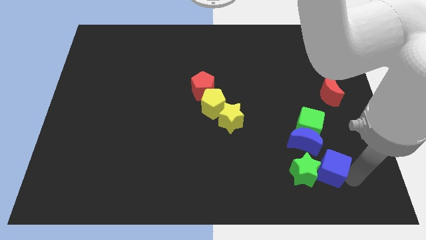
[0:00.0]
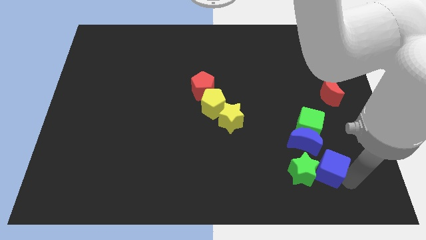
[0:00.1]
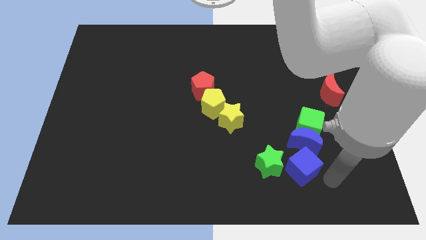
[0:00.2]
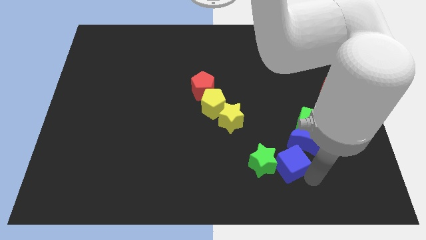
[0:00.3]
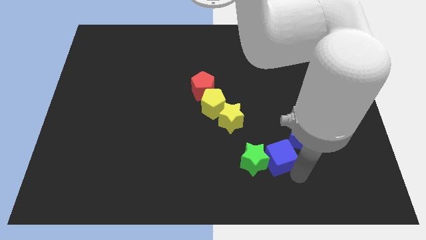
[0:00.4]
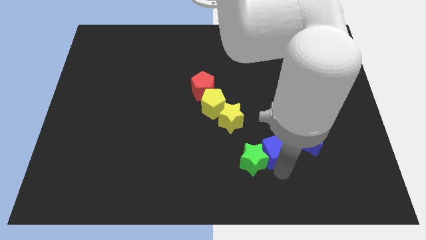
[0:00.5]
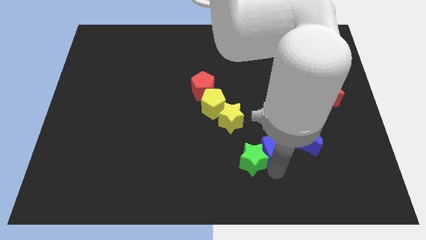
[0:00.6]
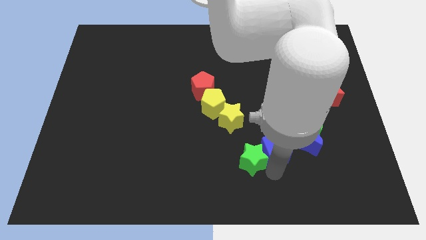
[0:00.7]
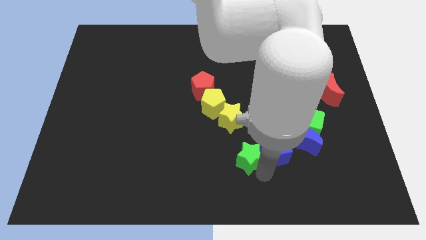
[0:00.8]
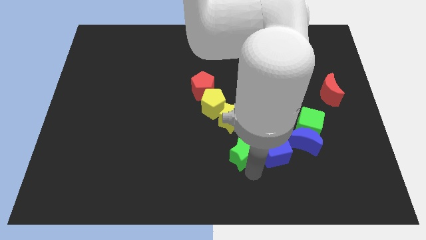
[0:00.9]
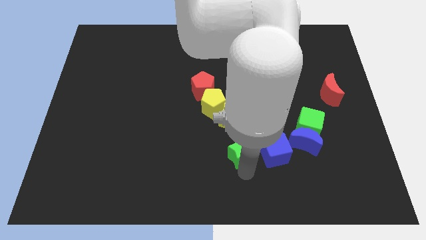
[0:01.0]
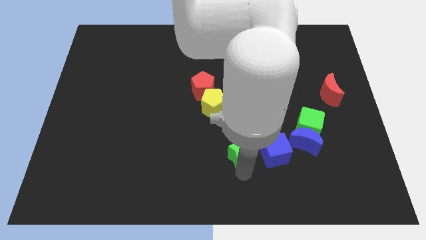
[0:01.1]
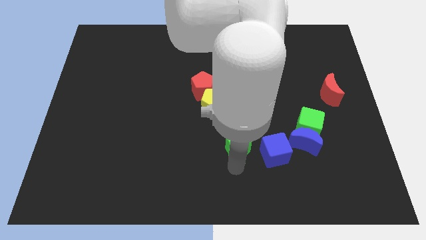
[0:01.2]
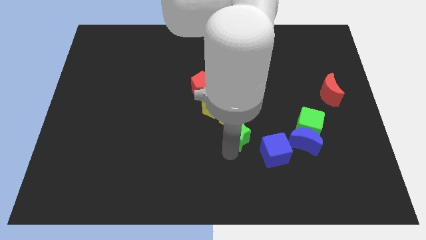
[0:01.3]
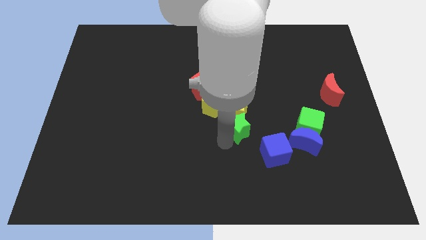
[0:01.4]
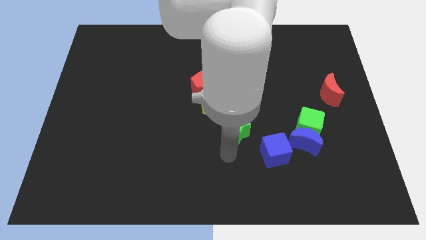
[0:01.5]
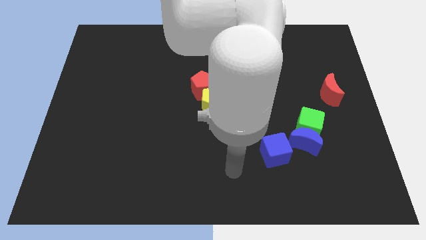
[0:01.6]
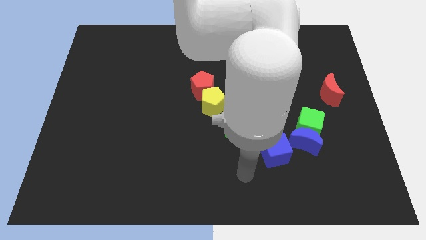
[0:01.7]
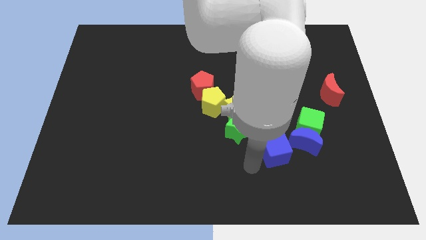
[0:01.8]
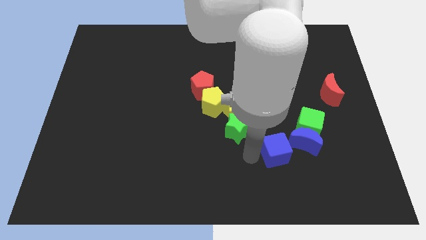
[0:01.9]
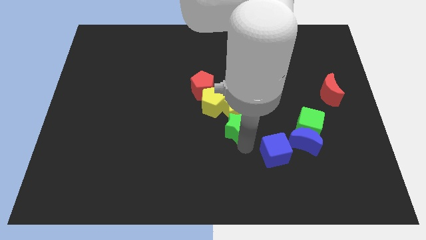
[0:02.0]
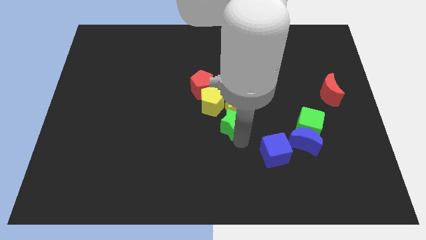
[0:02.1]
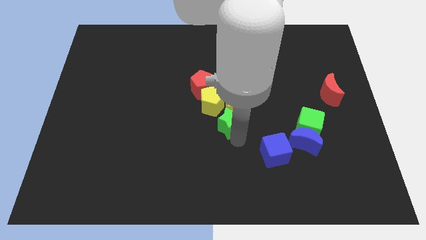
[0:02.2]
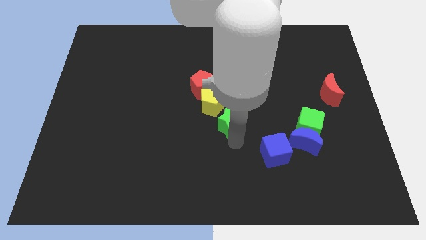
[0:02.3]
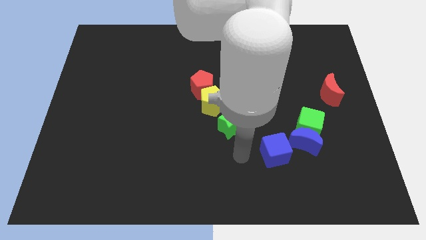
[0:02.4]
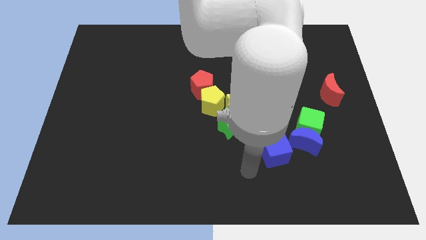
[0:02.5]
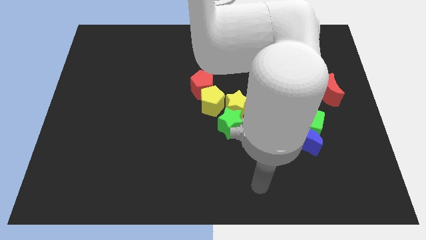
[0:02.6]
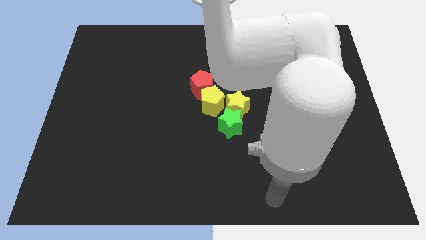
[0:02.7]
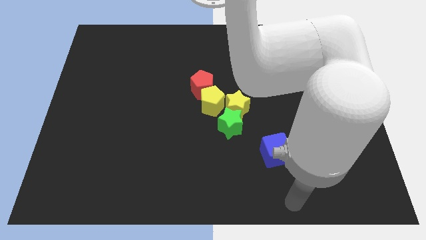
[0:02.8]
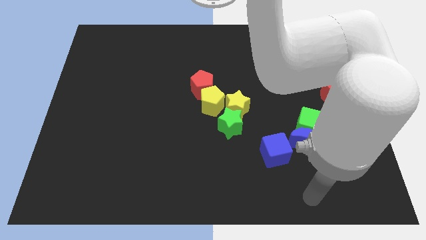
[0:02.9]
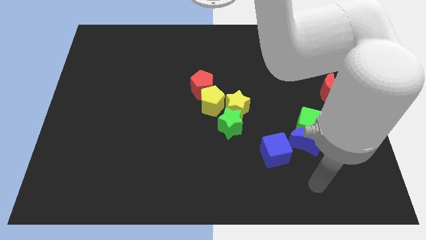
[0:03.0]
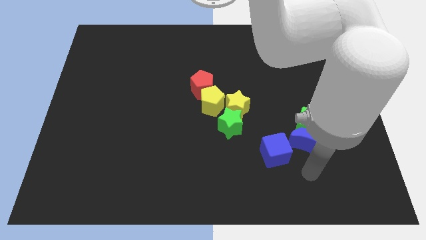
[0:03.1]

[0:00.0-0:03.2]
place the green star below the yellow star

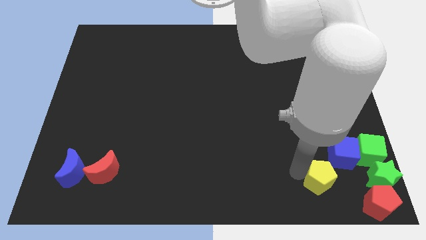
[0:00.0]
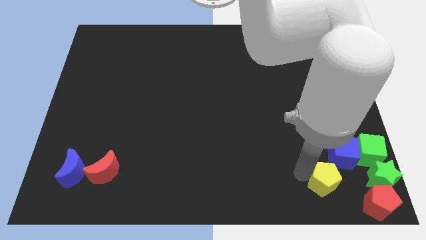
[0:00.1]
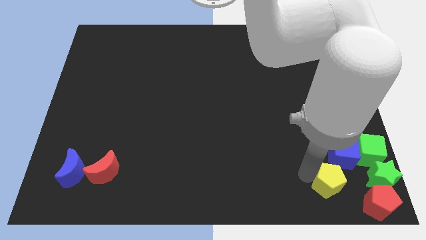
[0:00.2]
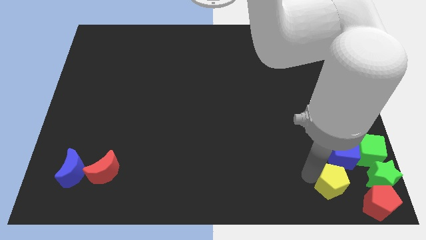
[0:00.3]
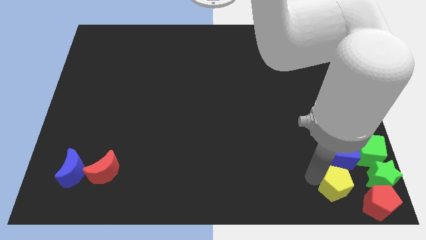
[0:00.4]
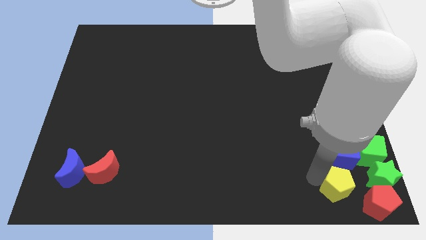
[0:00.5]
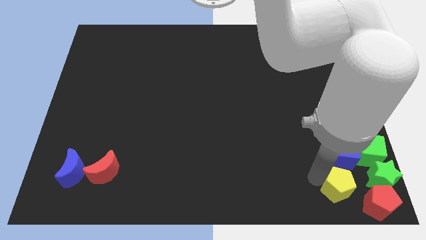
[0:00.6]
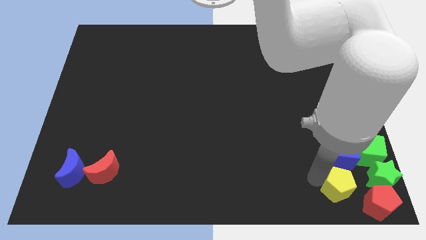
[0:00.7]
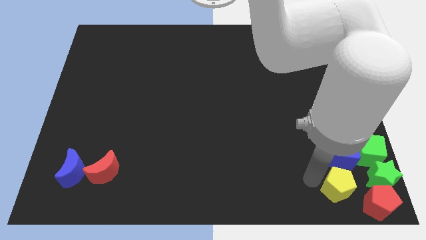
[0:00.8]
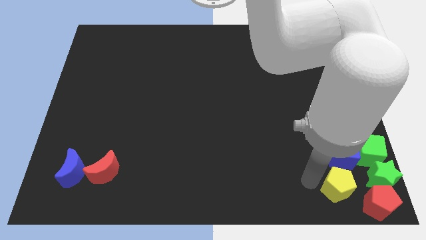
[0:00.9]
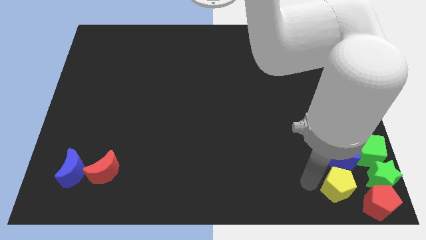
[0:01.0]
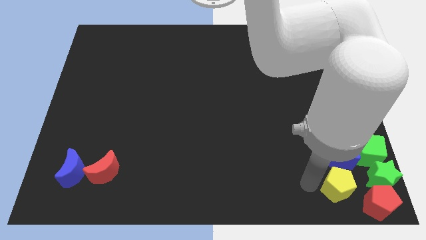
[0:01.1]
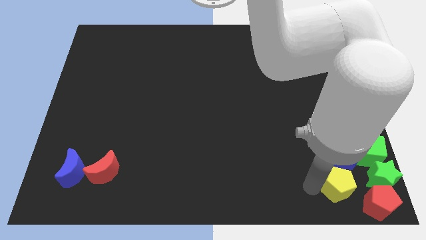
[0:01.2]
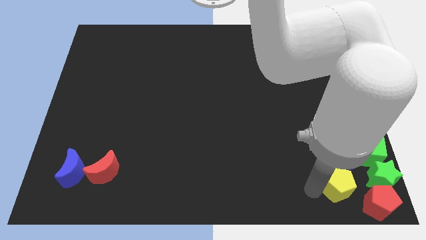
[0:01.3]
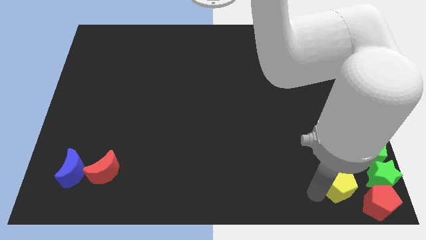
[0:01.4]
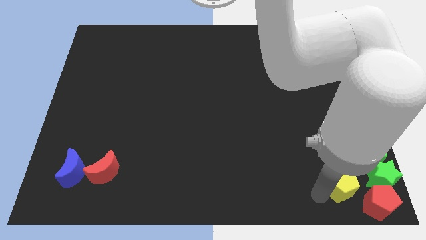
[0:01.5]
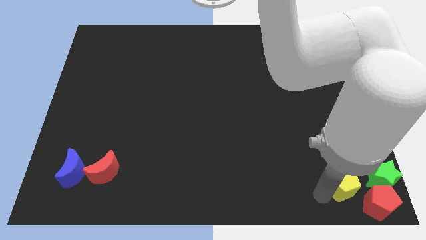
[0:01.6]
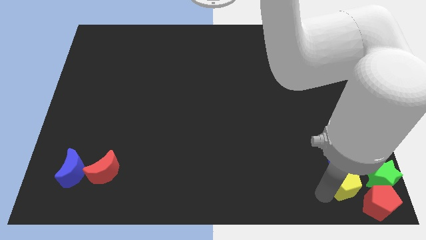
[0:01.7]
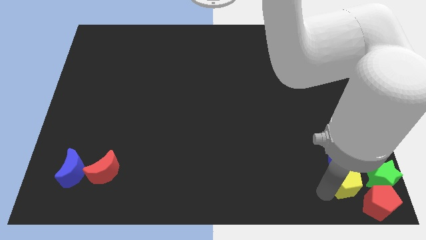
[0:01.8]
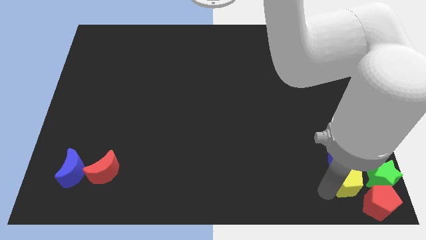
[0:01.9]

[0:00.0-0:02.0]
push the yellow pentagon into the group of blocks at the bottom right

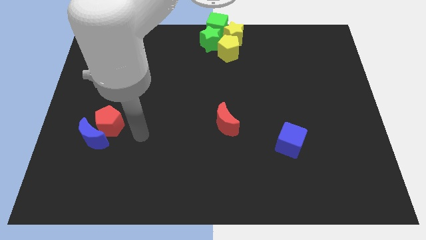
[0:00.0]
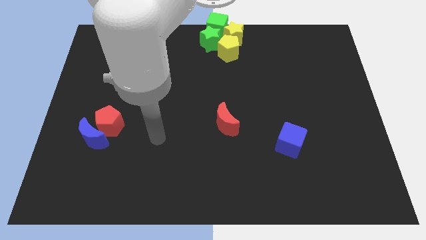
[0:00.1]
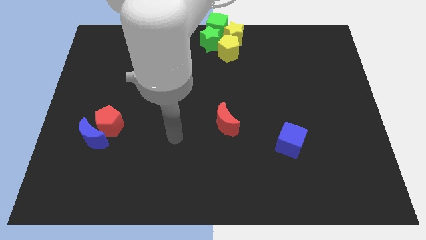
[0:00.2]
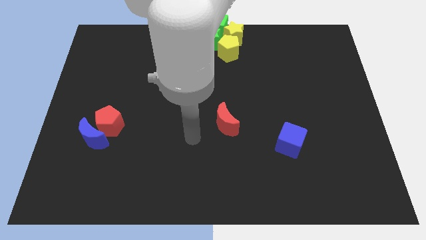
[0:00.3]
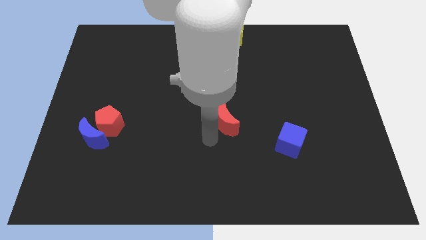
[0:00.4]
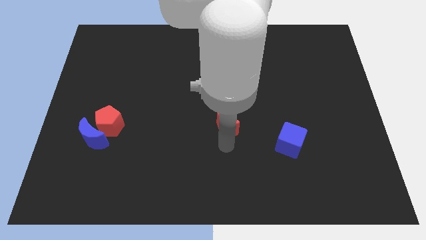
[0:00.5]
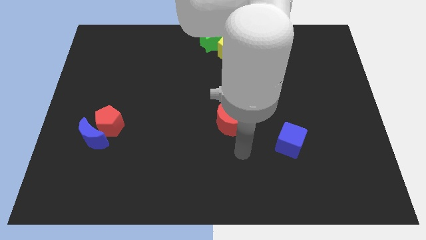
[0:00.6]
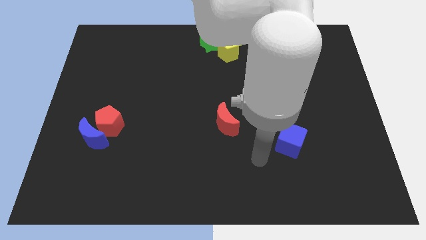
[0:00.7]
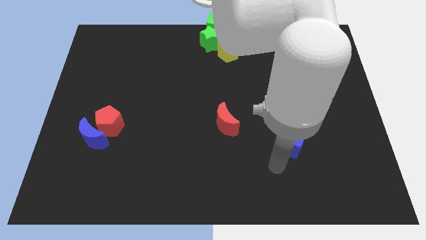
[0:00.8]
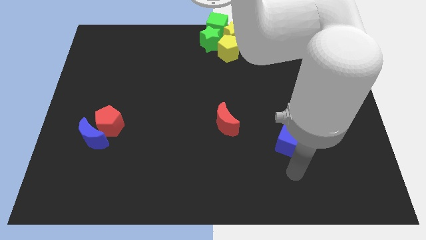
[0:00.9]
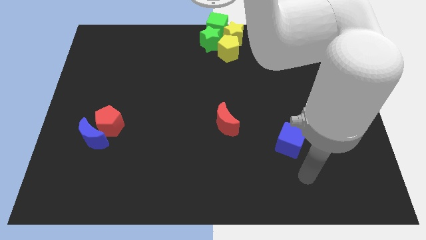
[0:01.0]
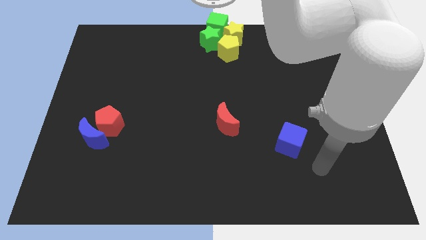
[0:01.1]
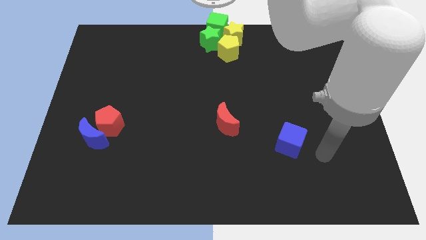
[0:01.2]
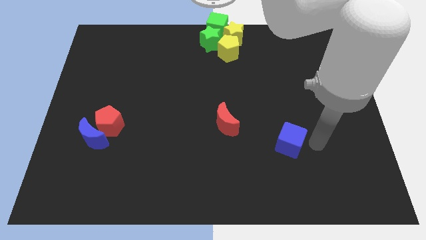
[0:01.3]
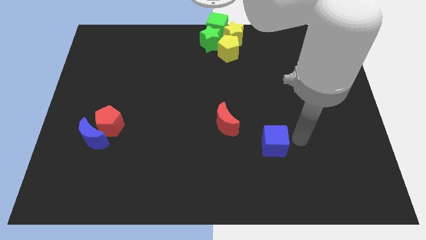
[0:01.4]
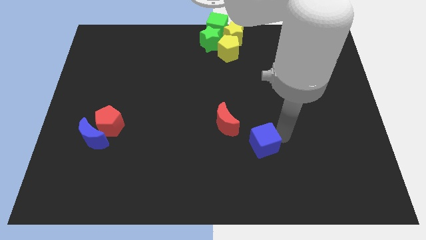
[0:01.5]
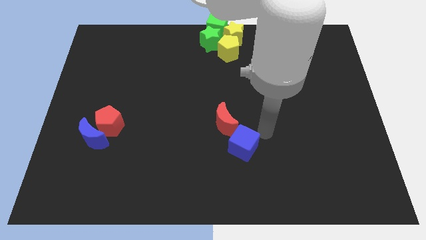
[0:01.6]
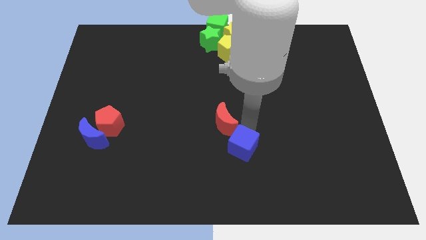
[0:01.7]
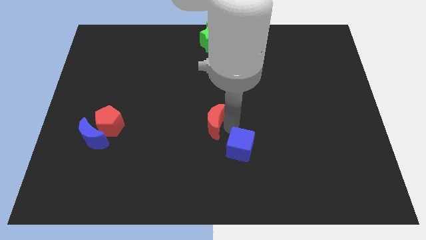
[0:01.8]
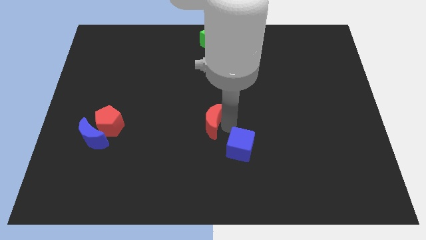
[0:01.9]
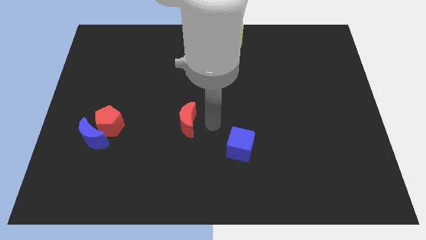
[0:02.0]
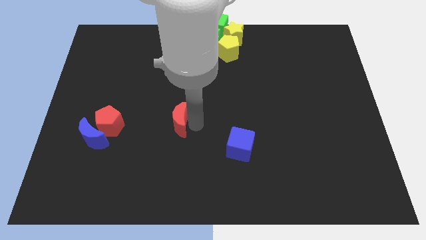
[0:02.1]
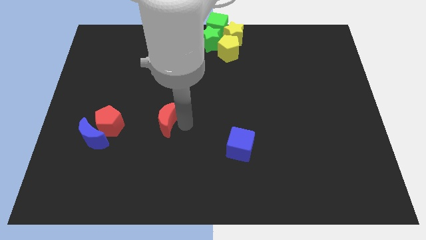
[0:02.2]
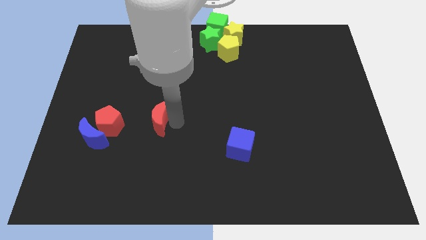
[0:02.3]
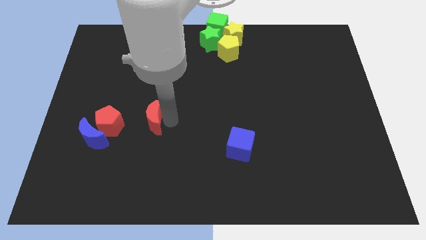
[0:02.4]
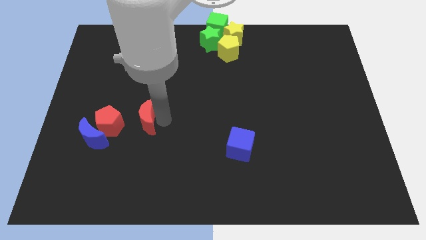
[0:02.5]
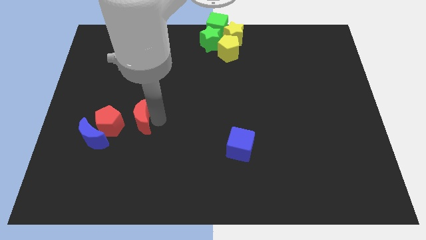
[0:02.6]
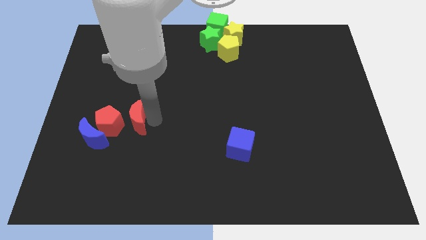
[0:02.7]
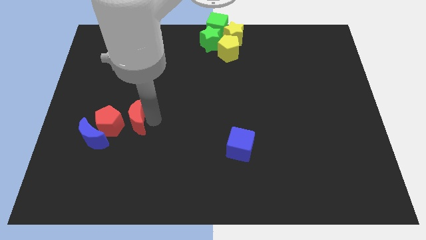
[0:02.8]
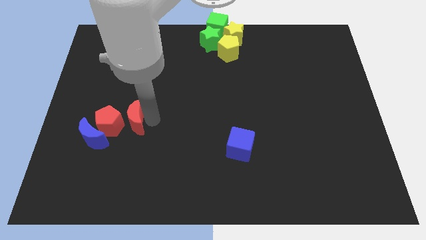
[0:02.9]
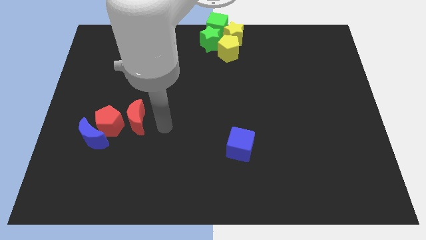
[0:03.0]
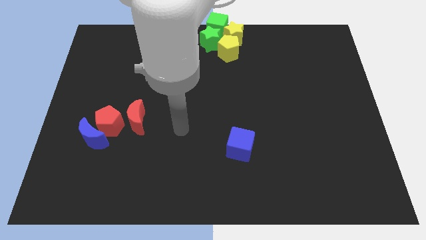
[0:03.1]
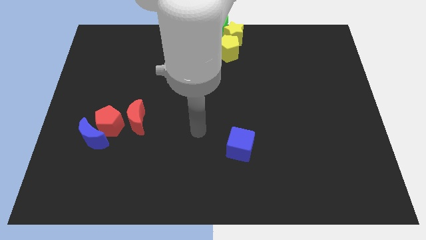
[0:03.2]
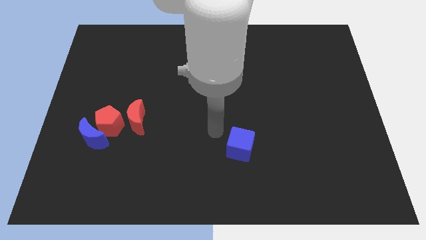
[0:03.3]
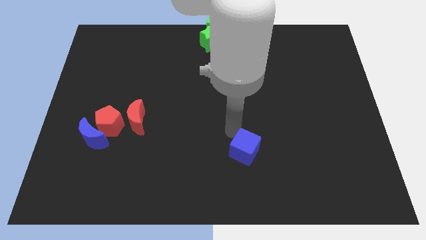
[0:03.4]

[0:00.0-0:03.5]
push the red crescent to the right of the red pentagon
